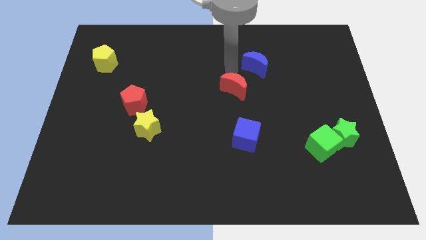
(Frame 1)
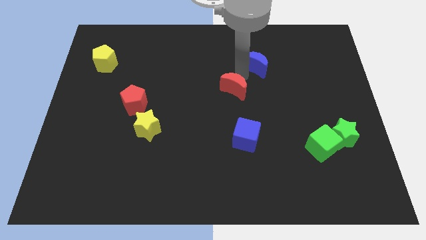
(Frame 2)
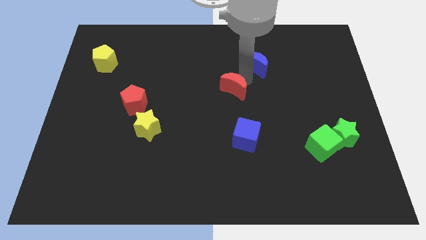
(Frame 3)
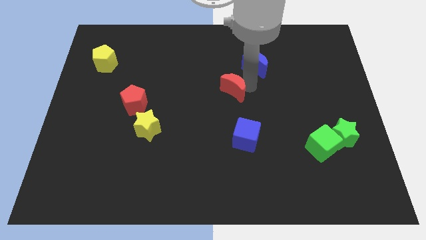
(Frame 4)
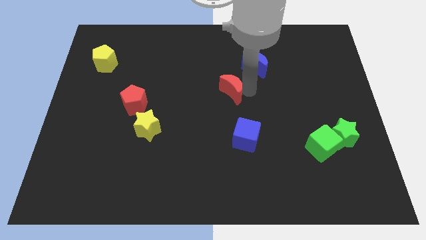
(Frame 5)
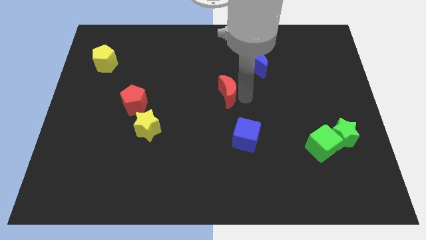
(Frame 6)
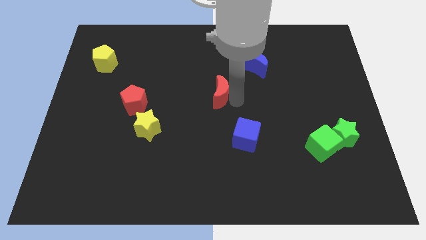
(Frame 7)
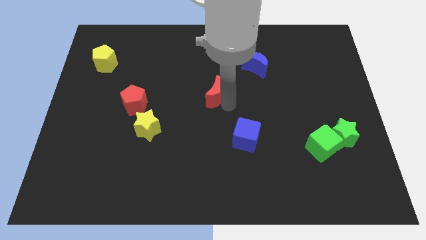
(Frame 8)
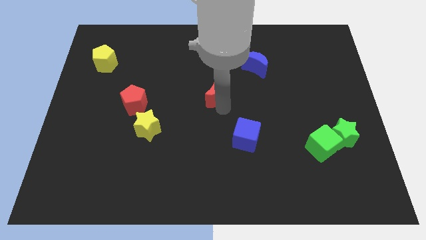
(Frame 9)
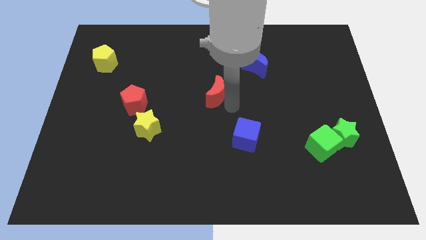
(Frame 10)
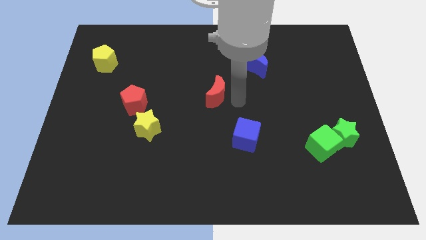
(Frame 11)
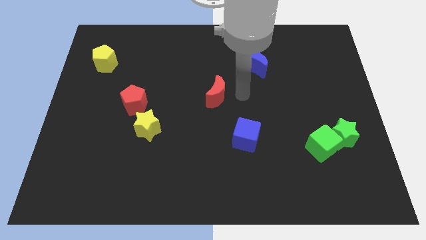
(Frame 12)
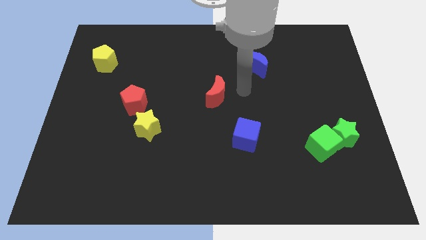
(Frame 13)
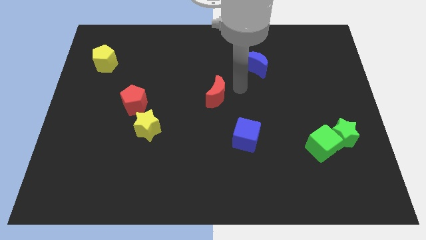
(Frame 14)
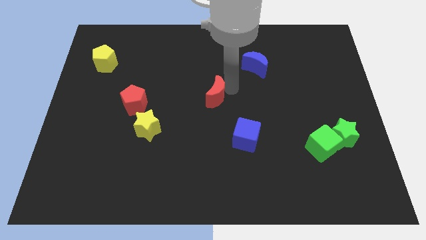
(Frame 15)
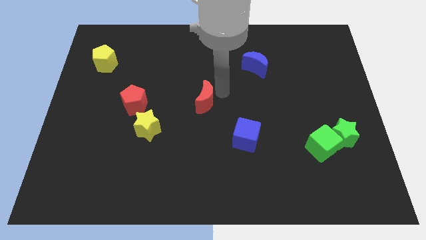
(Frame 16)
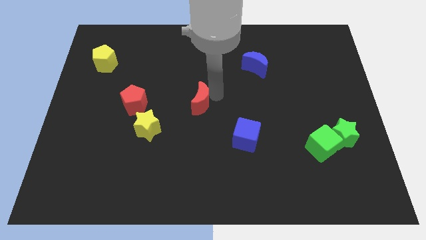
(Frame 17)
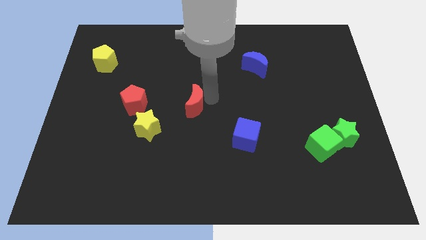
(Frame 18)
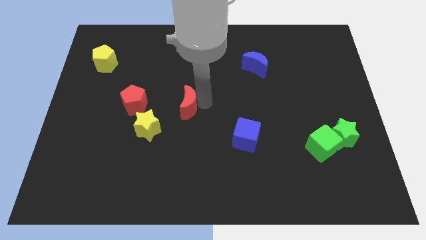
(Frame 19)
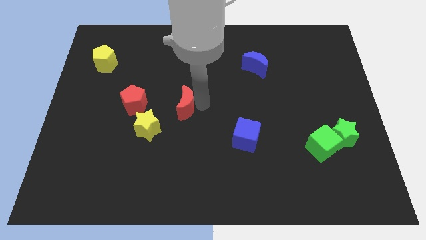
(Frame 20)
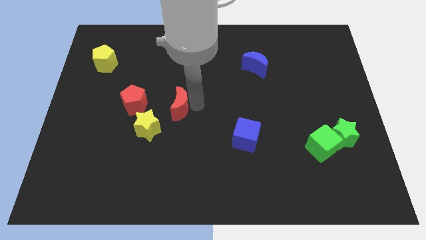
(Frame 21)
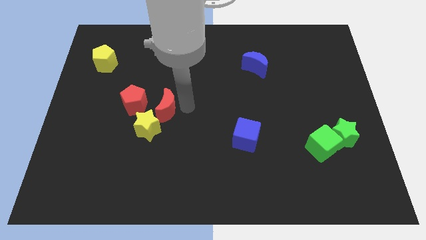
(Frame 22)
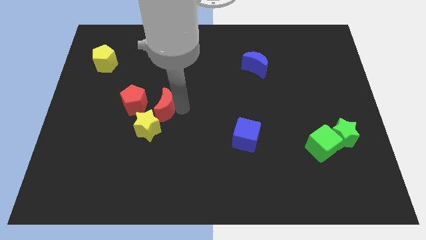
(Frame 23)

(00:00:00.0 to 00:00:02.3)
move the red crescent to right side of red pentagon

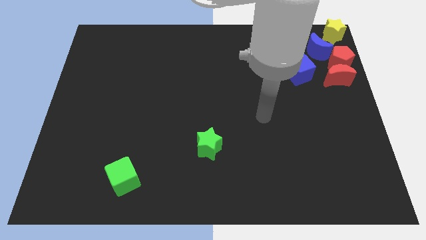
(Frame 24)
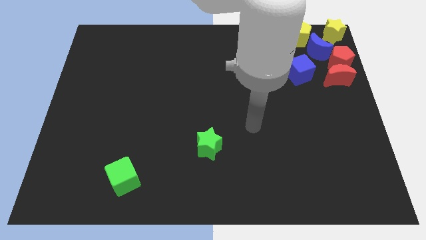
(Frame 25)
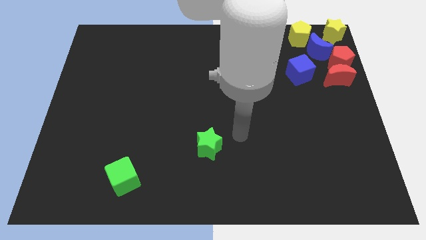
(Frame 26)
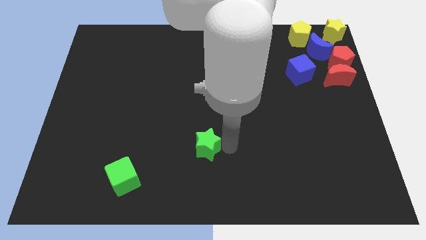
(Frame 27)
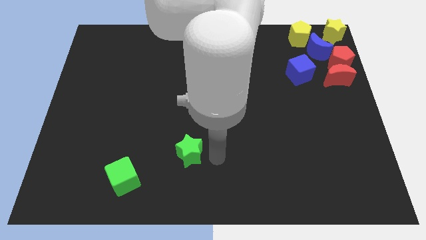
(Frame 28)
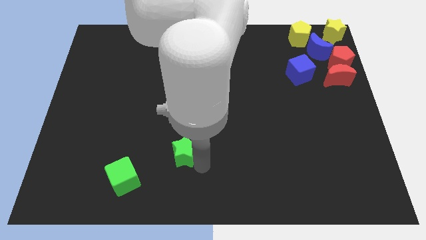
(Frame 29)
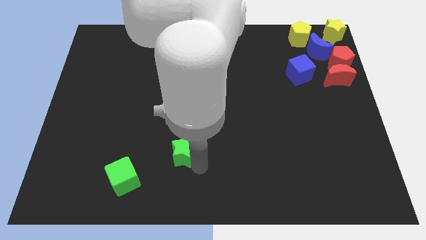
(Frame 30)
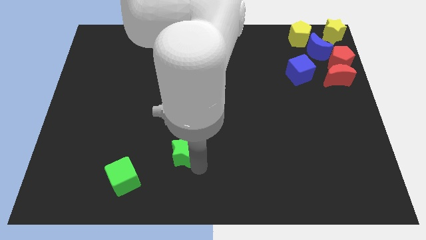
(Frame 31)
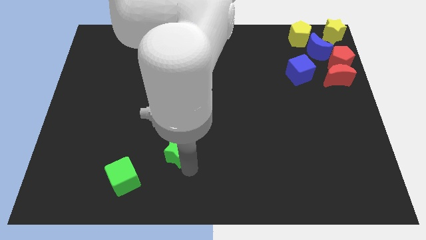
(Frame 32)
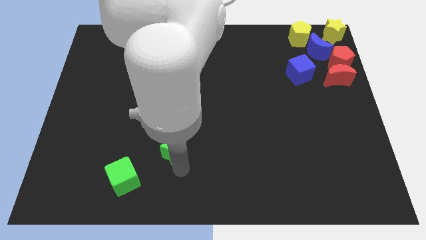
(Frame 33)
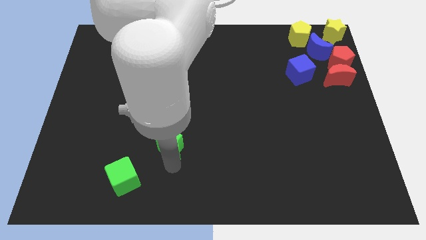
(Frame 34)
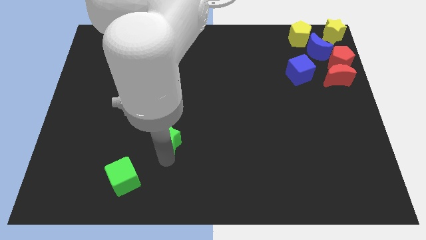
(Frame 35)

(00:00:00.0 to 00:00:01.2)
push the green star towards the green cube

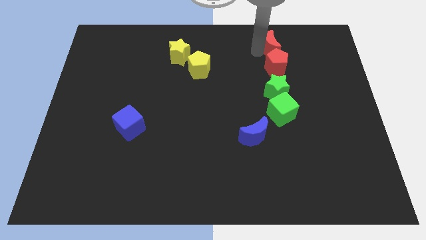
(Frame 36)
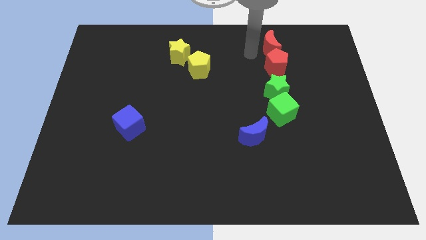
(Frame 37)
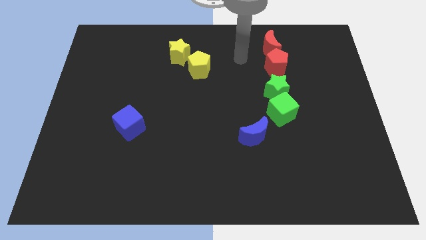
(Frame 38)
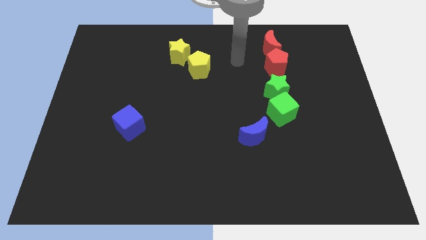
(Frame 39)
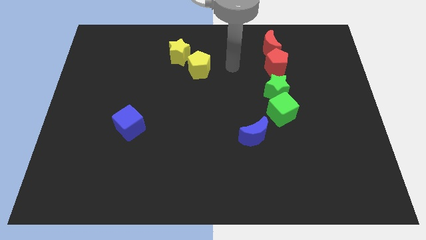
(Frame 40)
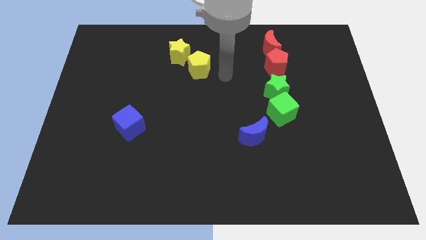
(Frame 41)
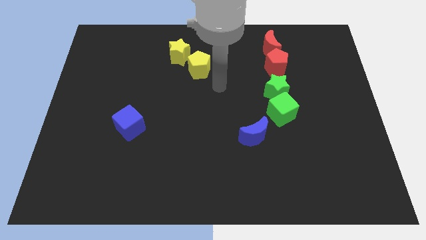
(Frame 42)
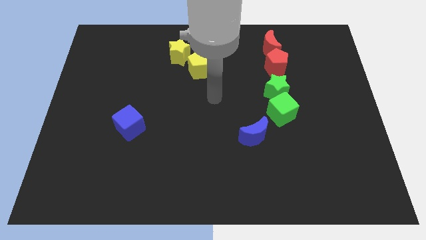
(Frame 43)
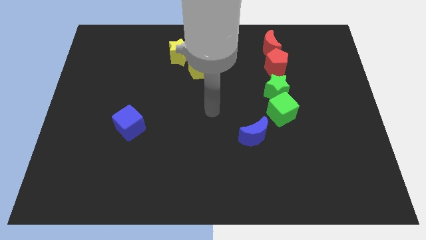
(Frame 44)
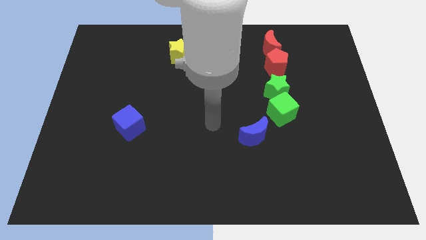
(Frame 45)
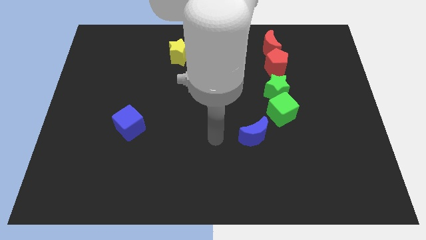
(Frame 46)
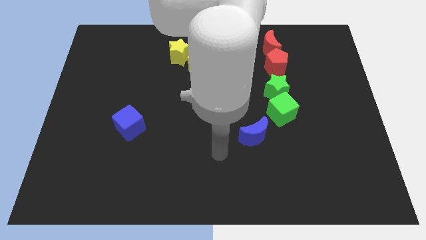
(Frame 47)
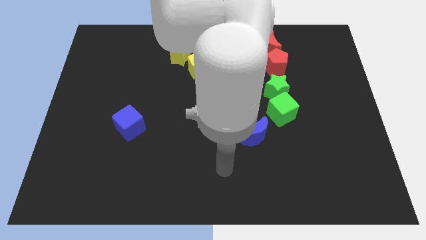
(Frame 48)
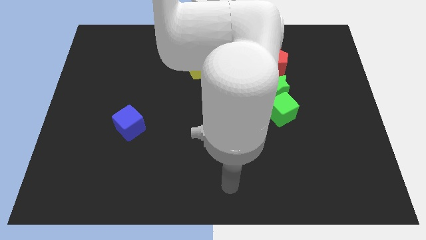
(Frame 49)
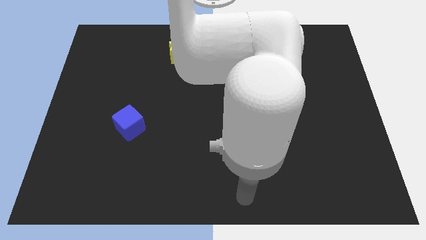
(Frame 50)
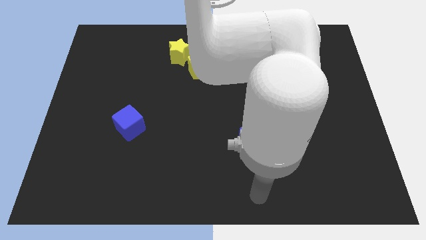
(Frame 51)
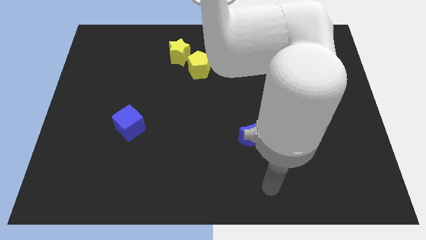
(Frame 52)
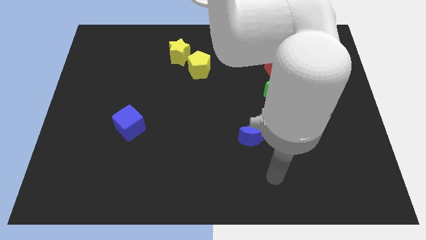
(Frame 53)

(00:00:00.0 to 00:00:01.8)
move your arm away from the red moon

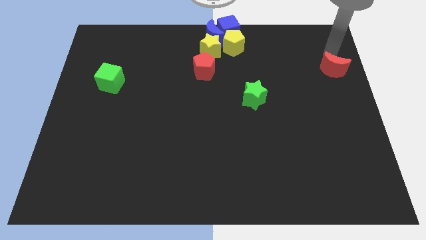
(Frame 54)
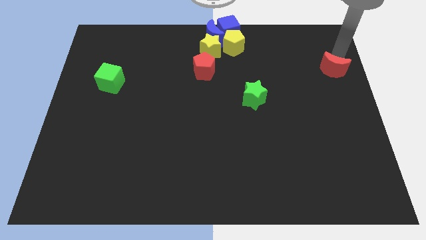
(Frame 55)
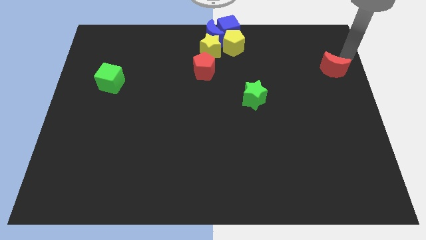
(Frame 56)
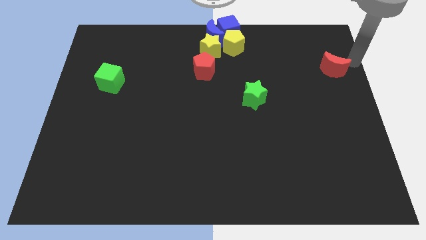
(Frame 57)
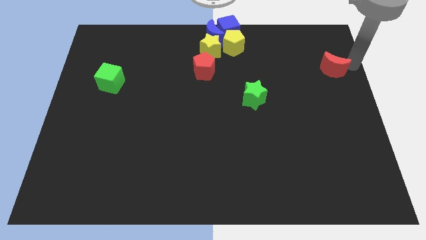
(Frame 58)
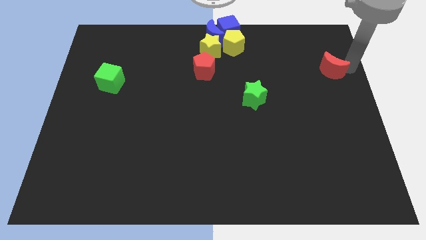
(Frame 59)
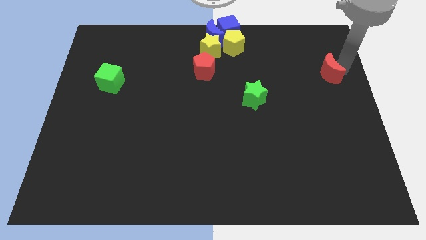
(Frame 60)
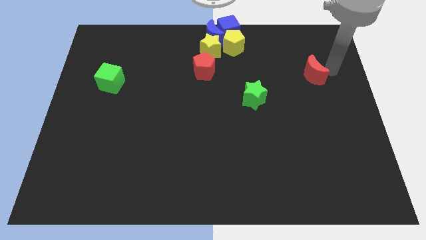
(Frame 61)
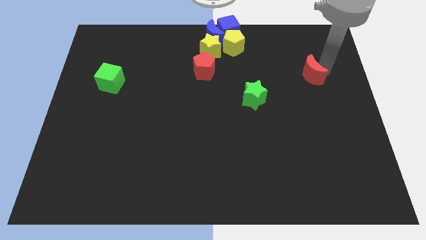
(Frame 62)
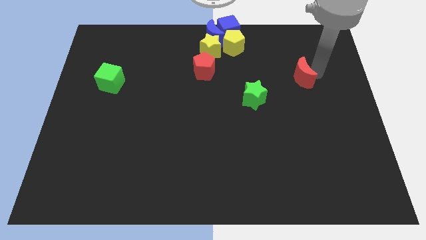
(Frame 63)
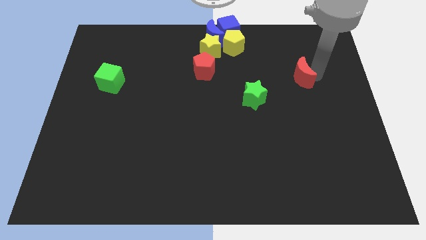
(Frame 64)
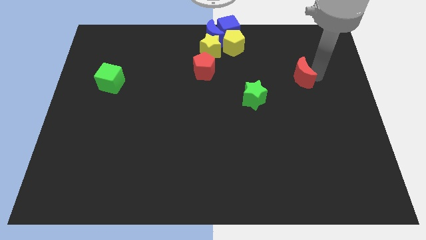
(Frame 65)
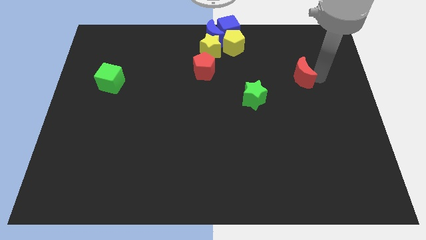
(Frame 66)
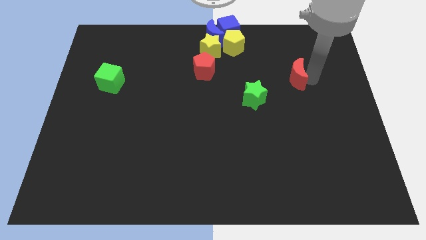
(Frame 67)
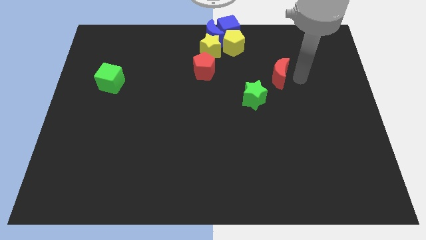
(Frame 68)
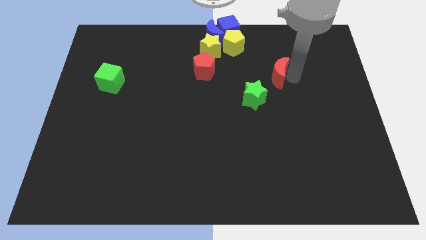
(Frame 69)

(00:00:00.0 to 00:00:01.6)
push the red moon towards the green star

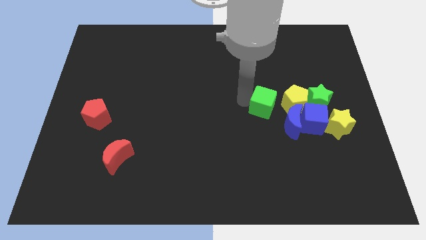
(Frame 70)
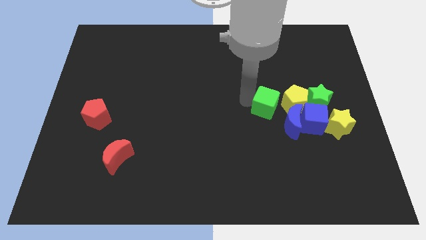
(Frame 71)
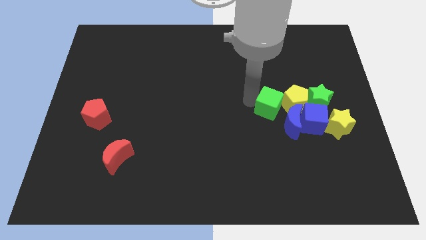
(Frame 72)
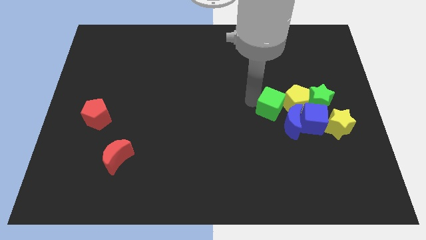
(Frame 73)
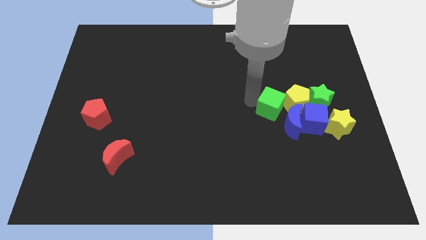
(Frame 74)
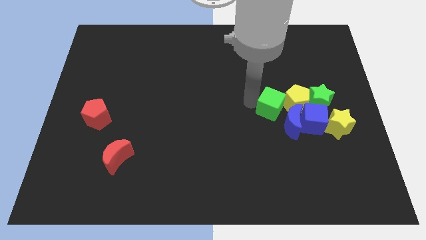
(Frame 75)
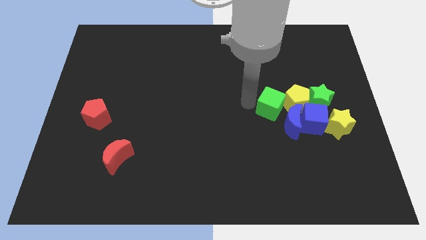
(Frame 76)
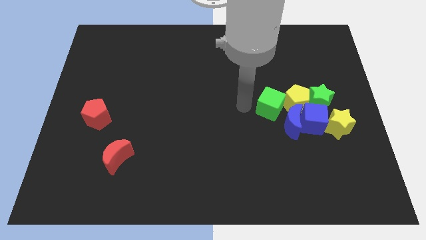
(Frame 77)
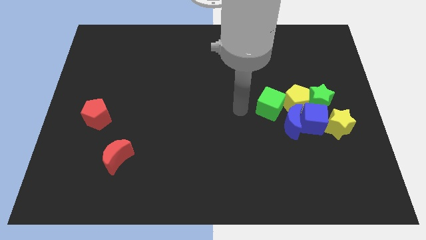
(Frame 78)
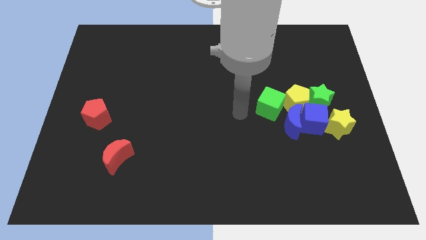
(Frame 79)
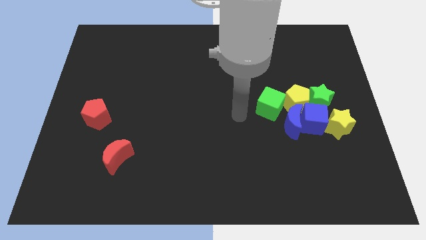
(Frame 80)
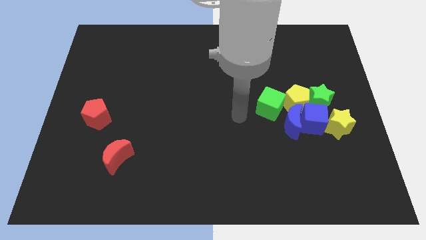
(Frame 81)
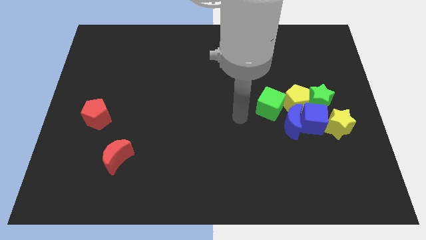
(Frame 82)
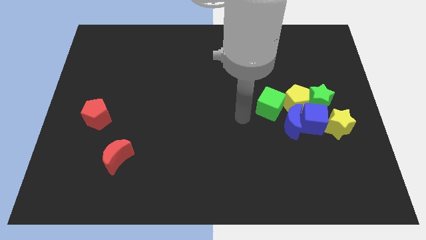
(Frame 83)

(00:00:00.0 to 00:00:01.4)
push the green cube to the left of the yellow pentagon

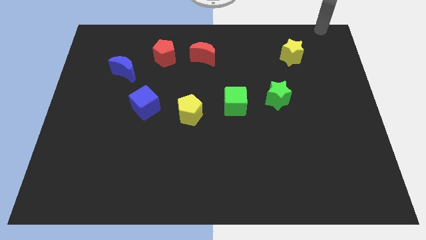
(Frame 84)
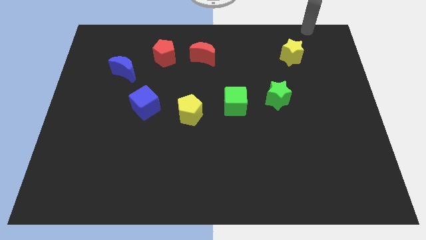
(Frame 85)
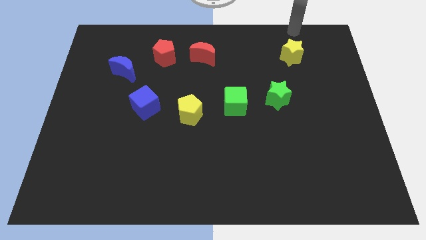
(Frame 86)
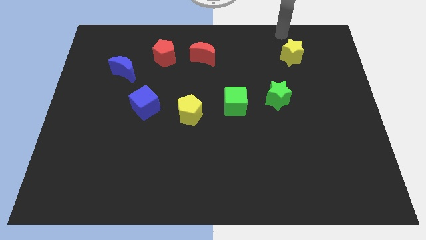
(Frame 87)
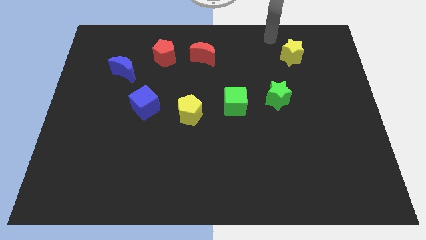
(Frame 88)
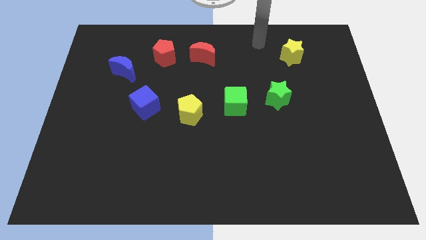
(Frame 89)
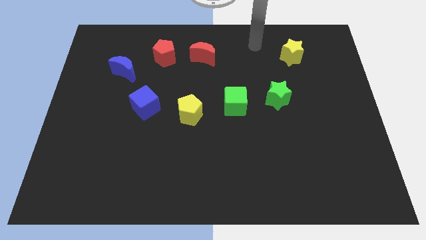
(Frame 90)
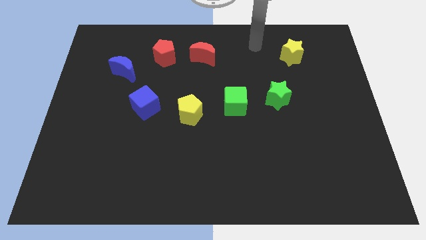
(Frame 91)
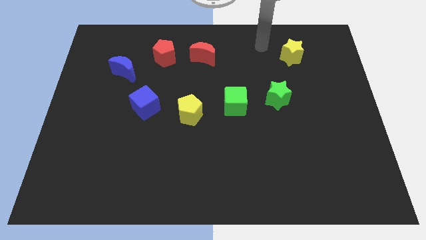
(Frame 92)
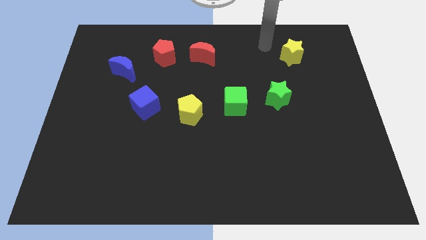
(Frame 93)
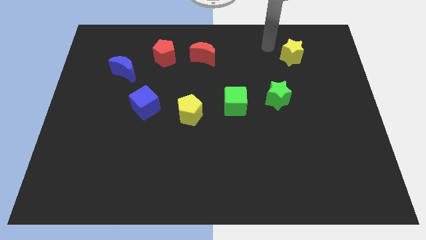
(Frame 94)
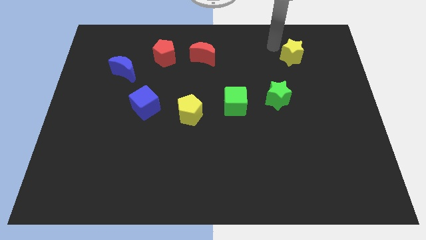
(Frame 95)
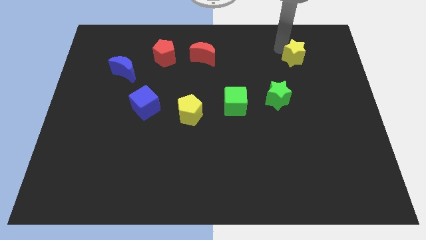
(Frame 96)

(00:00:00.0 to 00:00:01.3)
tap the yellow star
